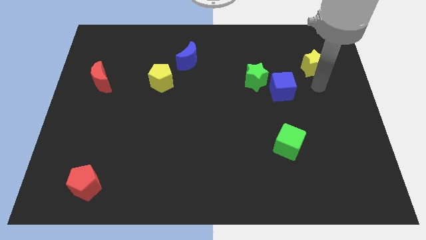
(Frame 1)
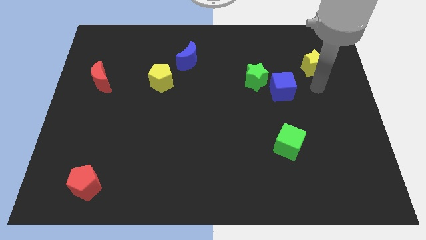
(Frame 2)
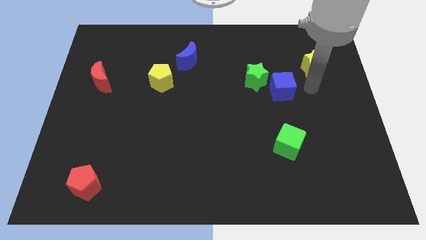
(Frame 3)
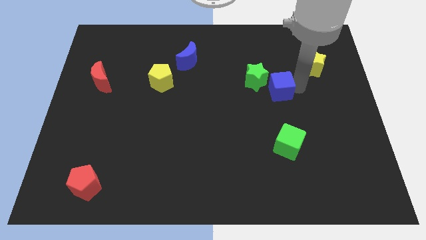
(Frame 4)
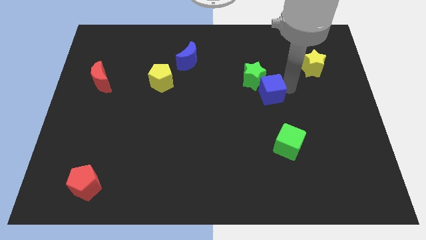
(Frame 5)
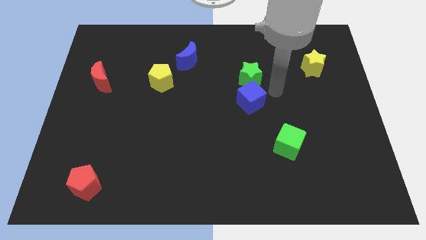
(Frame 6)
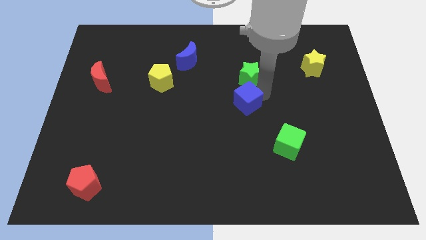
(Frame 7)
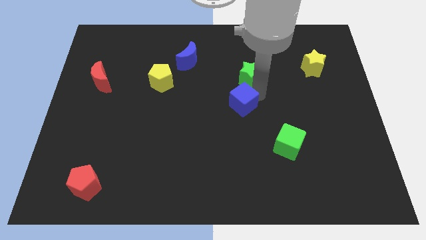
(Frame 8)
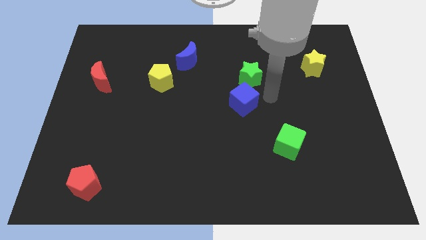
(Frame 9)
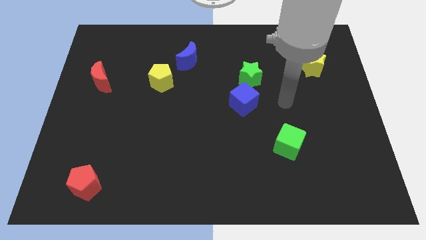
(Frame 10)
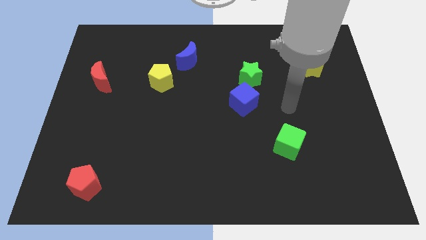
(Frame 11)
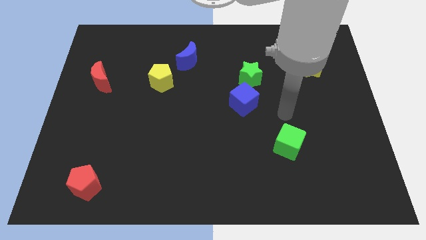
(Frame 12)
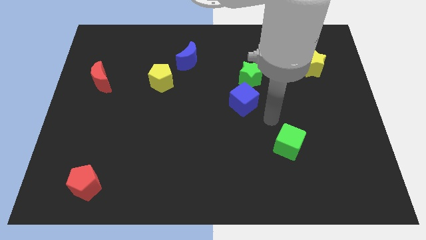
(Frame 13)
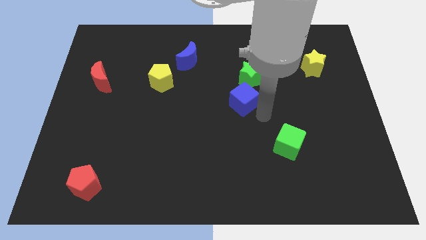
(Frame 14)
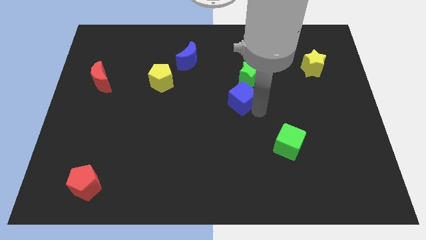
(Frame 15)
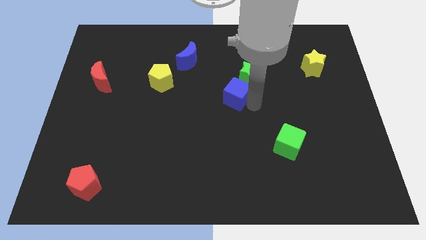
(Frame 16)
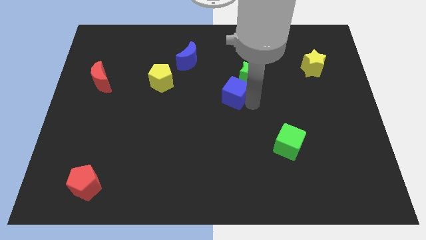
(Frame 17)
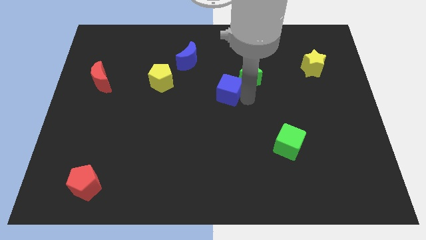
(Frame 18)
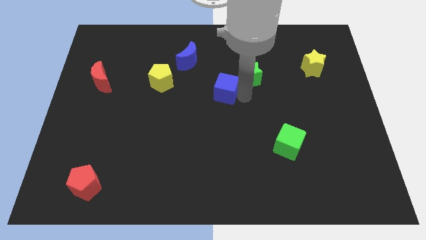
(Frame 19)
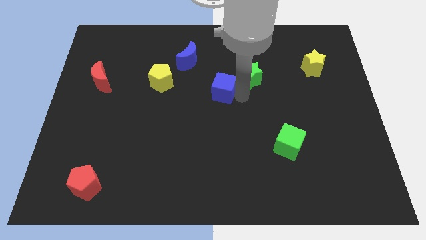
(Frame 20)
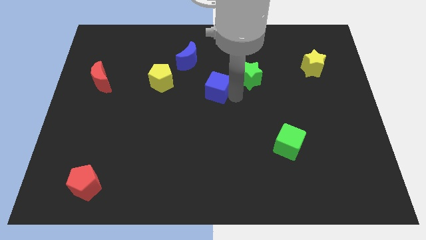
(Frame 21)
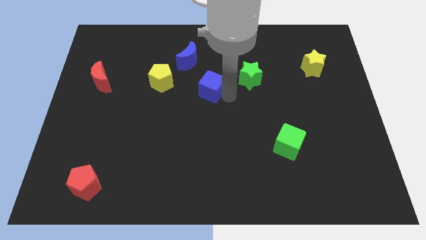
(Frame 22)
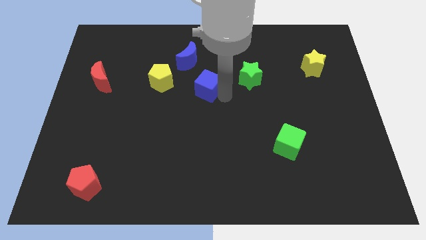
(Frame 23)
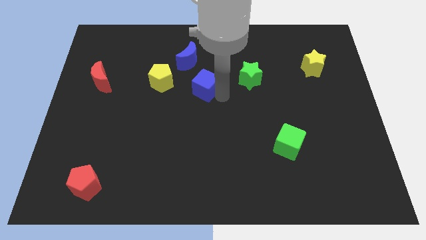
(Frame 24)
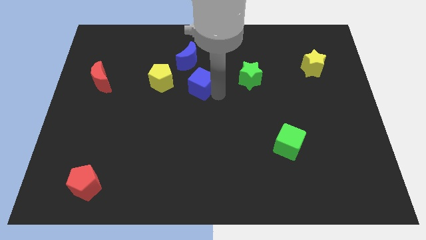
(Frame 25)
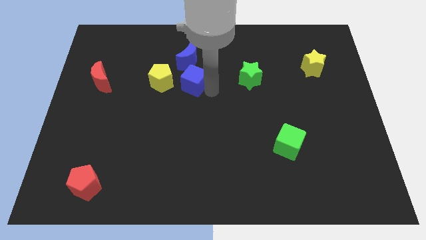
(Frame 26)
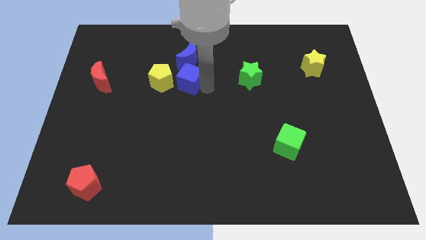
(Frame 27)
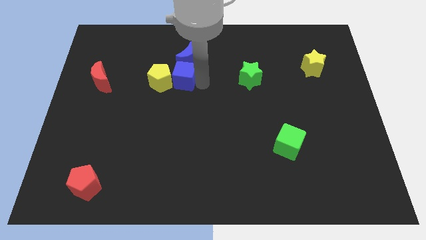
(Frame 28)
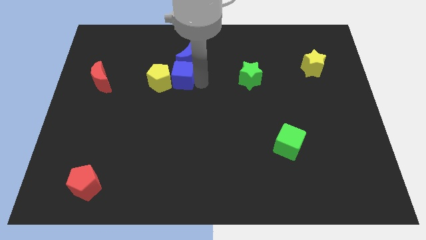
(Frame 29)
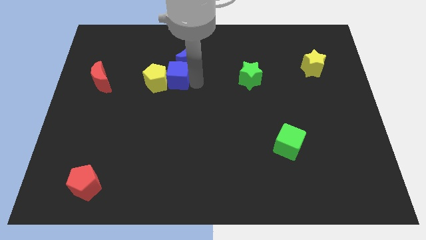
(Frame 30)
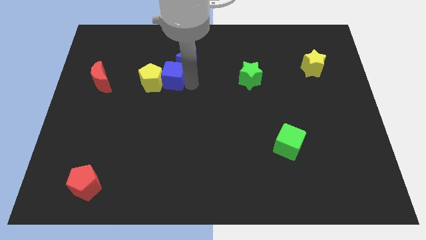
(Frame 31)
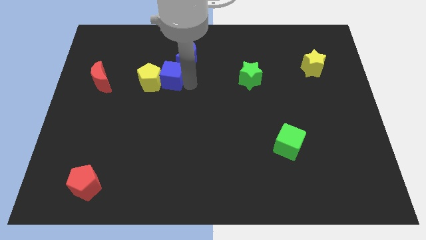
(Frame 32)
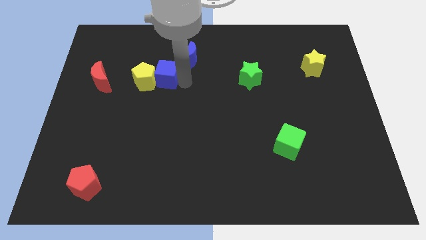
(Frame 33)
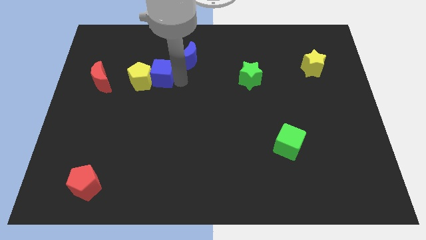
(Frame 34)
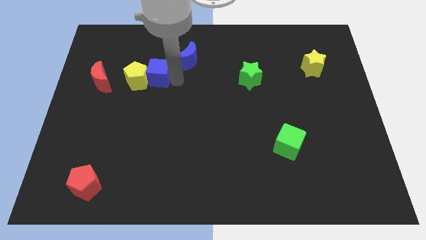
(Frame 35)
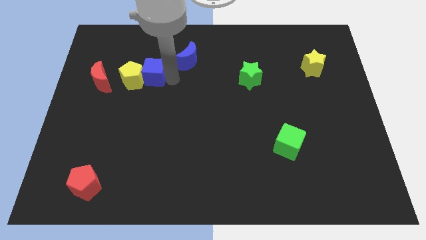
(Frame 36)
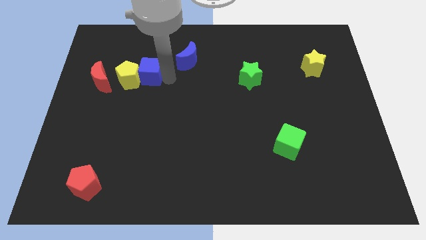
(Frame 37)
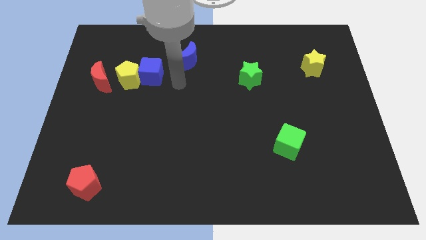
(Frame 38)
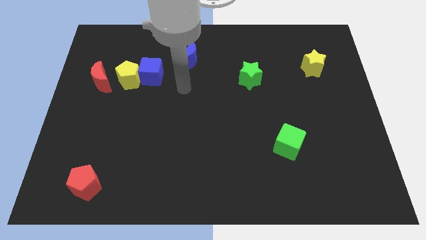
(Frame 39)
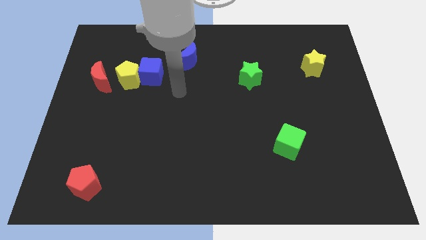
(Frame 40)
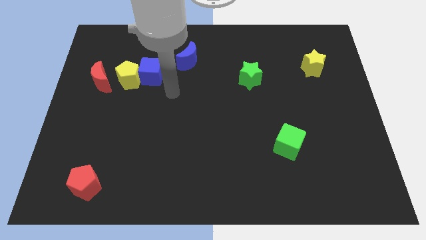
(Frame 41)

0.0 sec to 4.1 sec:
push the blue cube into the yellow pentagon

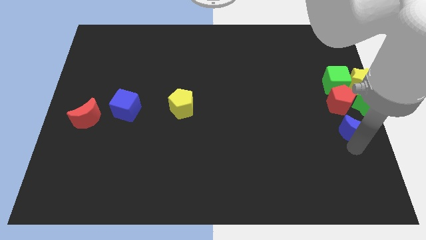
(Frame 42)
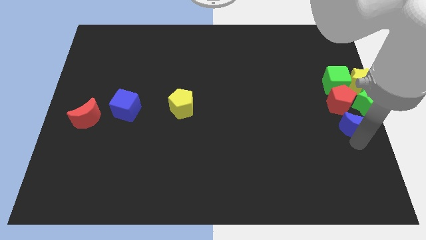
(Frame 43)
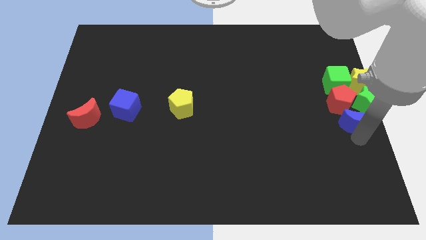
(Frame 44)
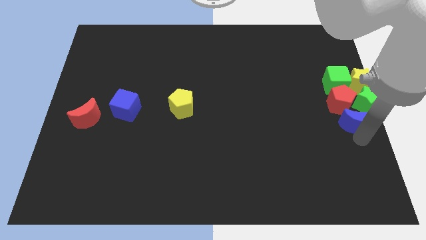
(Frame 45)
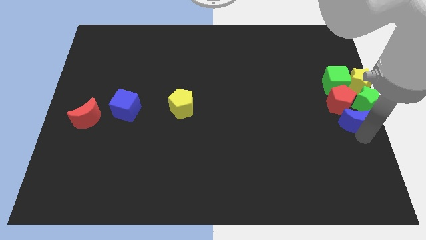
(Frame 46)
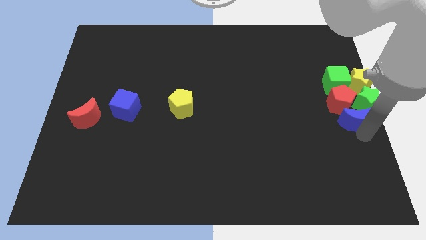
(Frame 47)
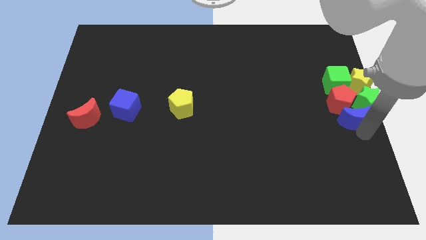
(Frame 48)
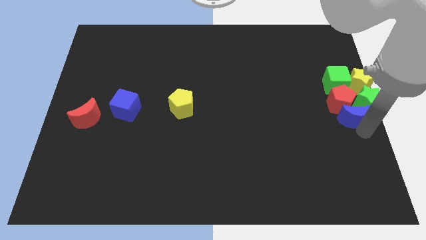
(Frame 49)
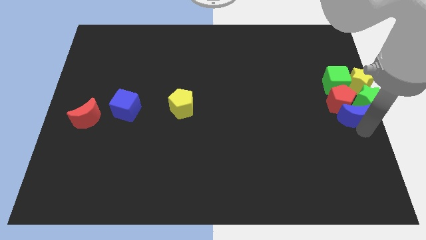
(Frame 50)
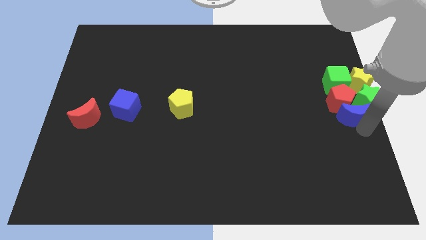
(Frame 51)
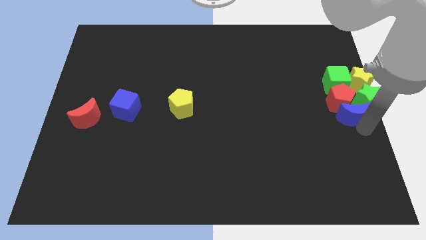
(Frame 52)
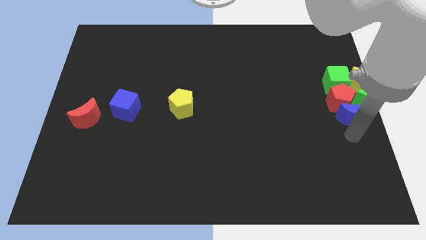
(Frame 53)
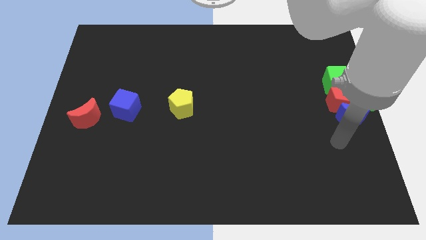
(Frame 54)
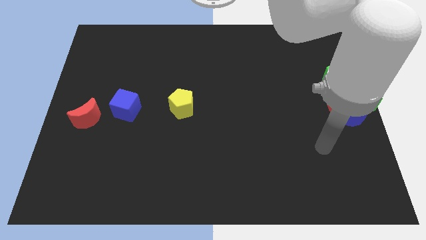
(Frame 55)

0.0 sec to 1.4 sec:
push the blue crescent to the group of blocks

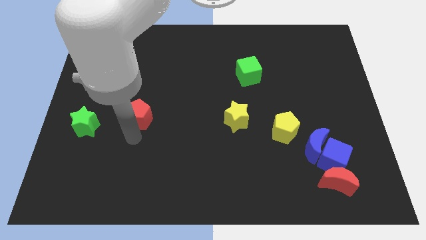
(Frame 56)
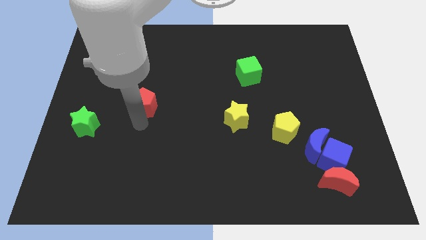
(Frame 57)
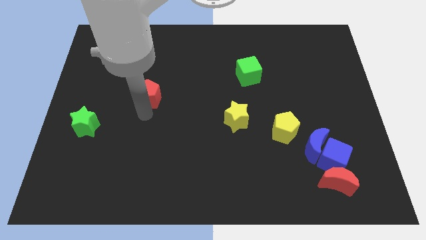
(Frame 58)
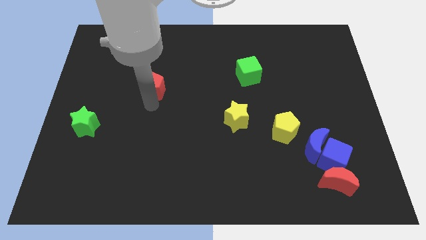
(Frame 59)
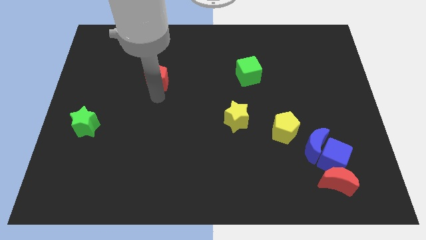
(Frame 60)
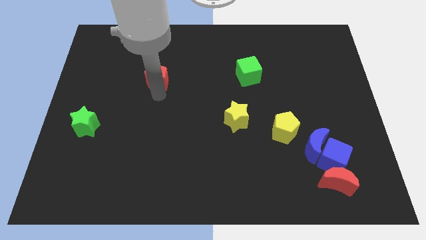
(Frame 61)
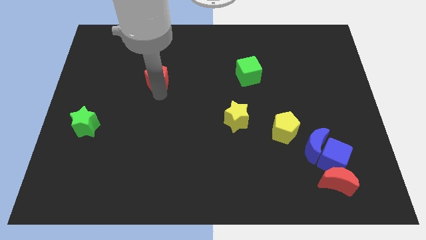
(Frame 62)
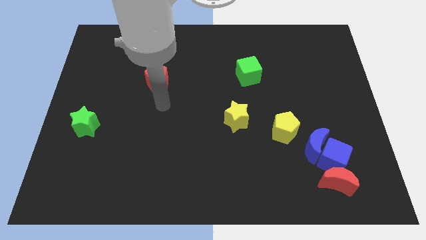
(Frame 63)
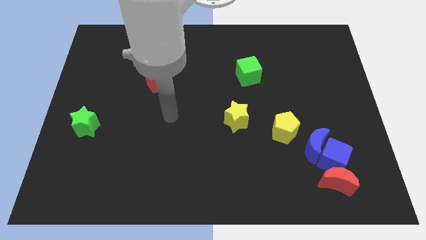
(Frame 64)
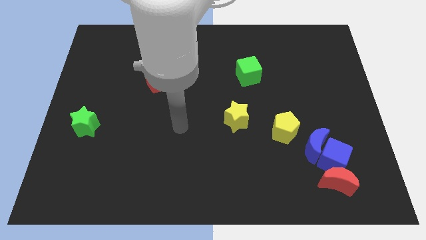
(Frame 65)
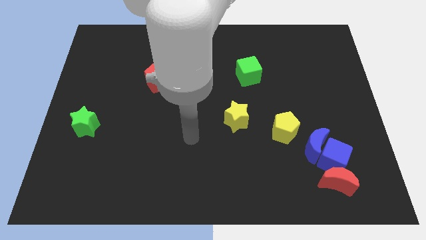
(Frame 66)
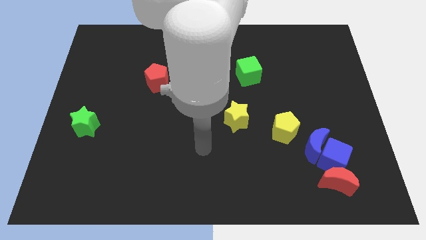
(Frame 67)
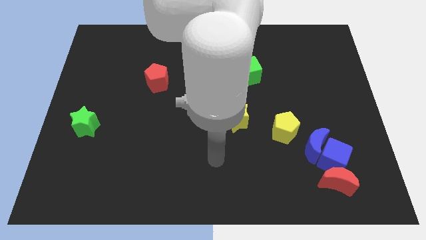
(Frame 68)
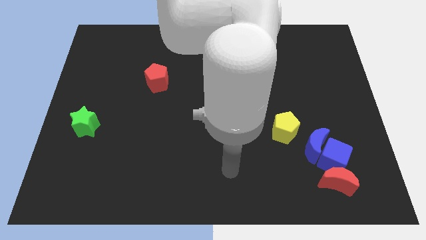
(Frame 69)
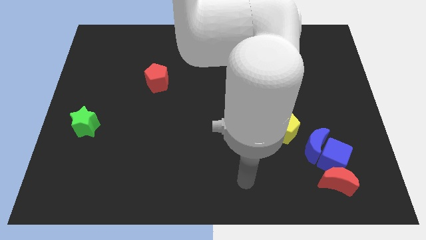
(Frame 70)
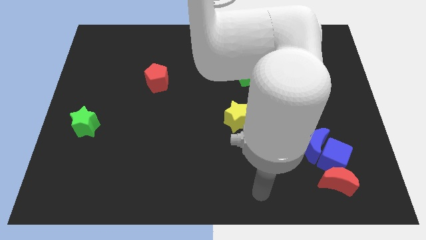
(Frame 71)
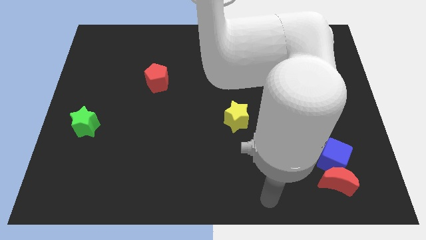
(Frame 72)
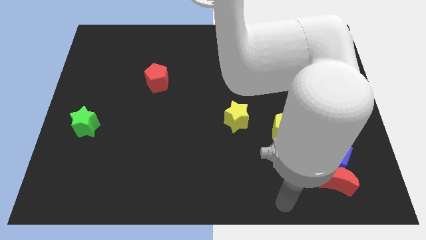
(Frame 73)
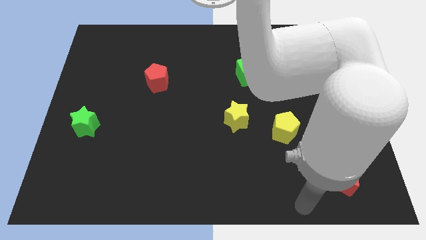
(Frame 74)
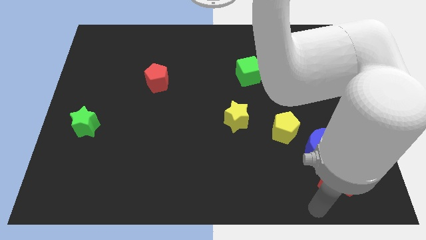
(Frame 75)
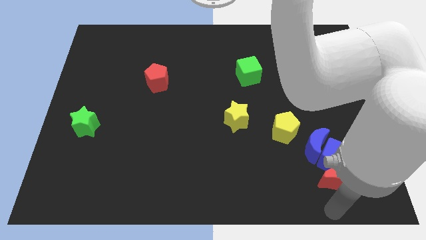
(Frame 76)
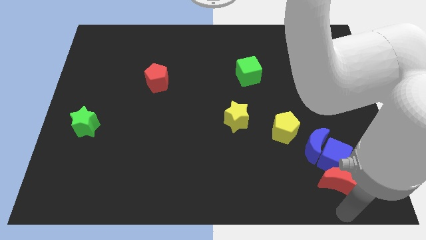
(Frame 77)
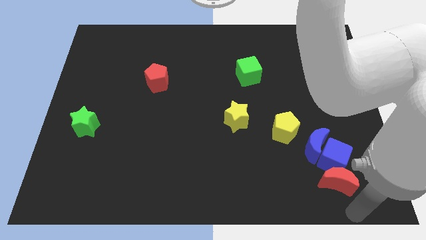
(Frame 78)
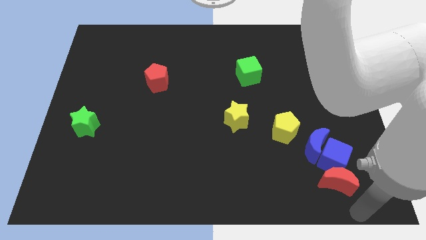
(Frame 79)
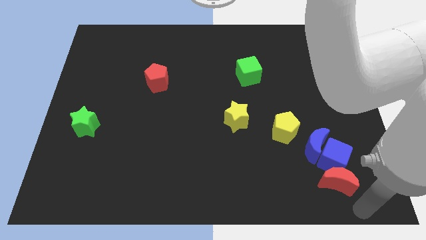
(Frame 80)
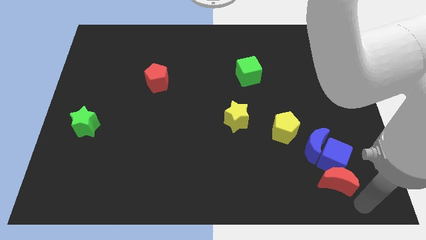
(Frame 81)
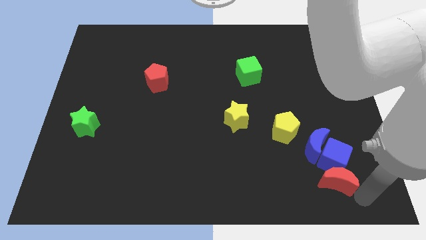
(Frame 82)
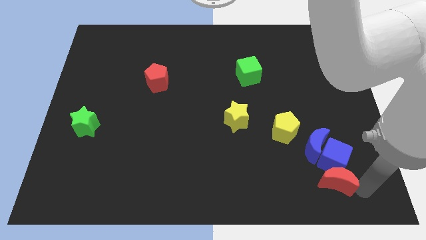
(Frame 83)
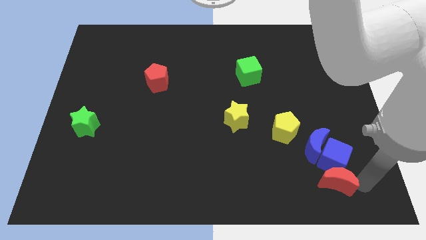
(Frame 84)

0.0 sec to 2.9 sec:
move your arm to the right of red moon

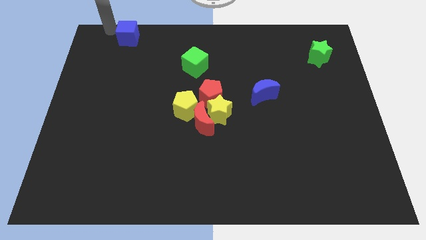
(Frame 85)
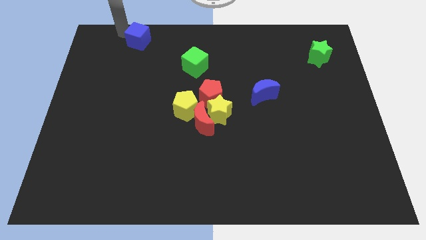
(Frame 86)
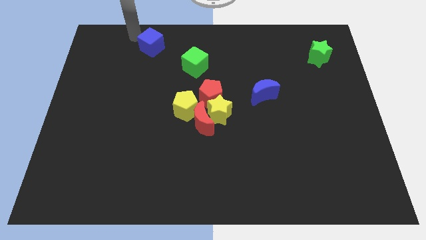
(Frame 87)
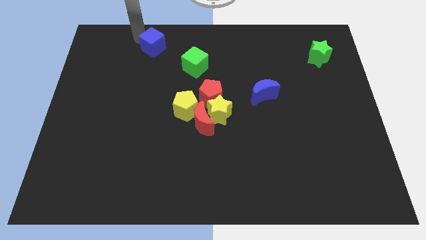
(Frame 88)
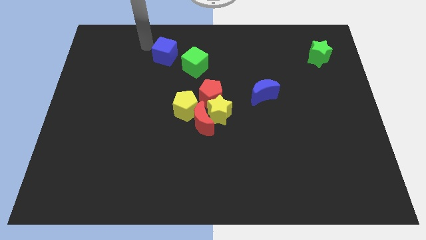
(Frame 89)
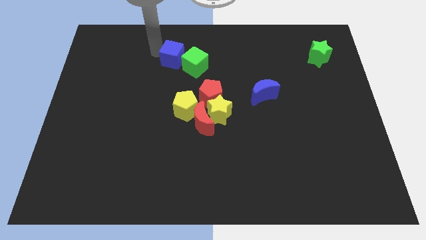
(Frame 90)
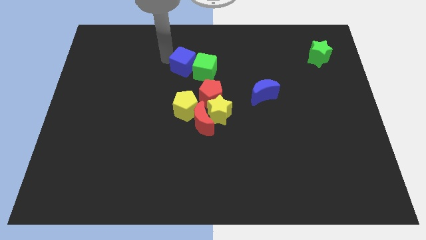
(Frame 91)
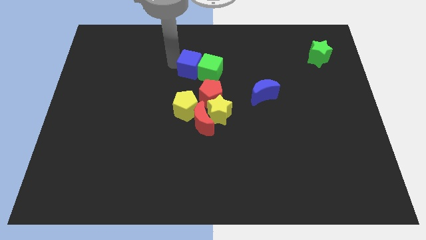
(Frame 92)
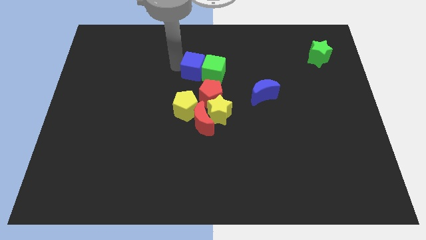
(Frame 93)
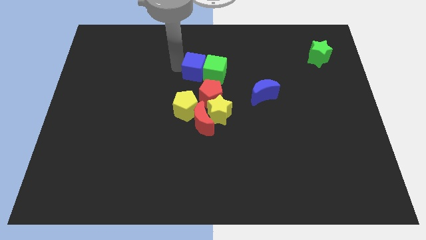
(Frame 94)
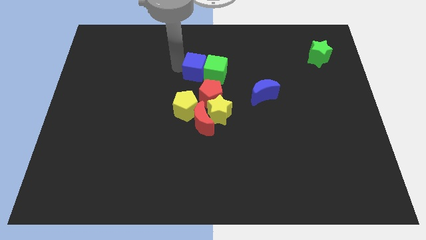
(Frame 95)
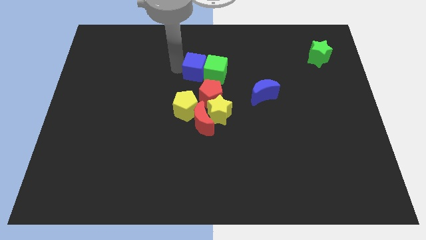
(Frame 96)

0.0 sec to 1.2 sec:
push the blue cube into the green cube
